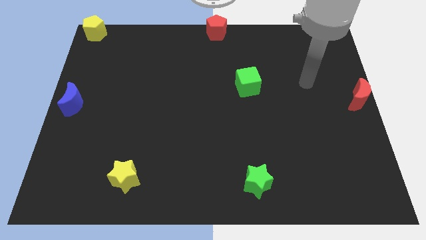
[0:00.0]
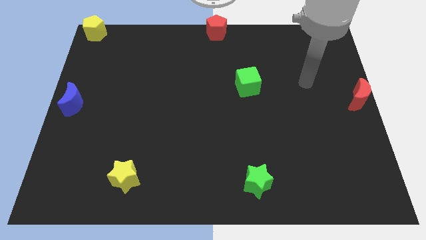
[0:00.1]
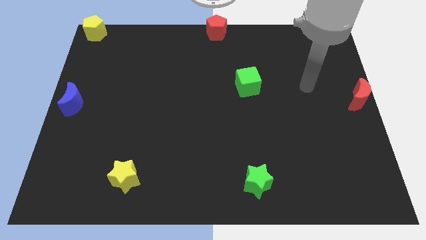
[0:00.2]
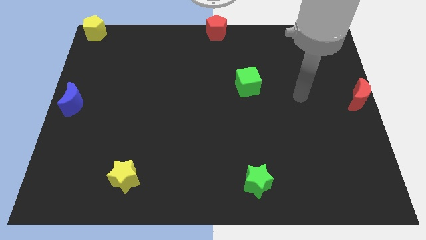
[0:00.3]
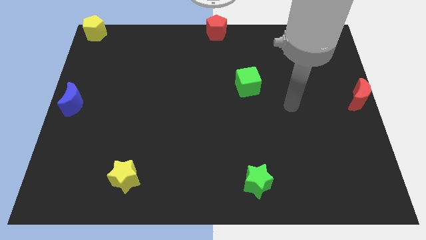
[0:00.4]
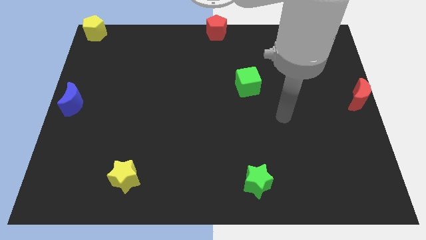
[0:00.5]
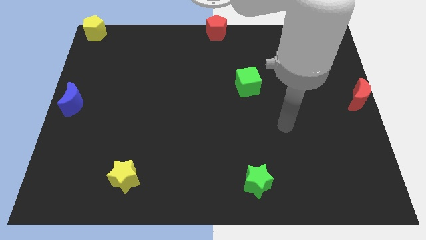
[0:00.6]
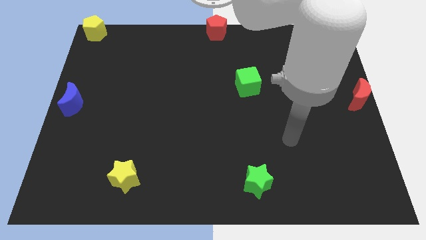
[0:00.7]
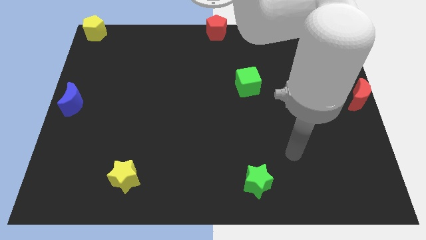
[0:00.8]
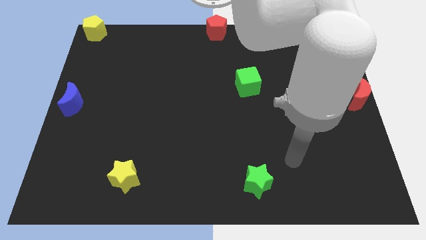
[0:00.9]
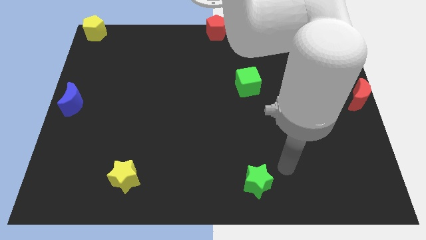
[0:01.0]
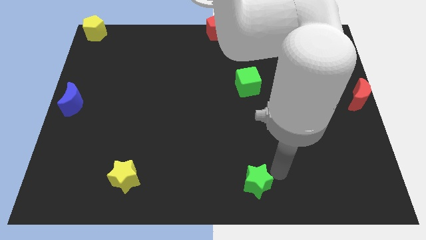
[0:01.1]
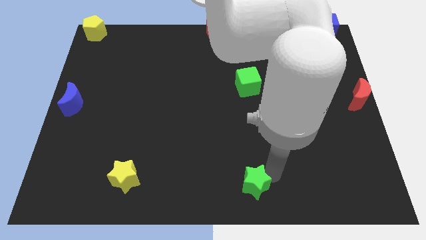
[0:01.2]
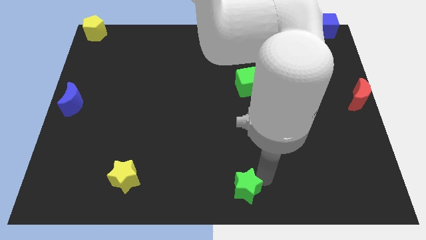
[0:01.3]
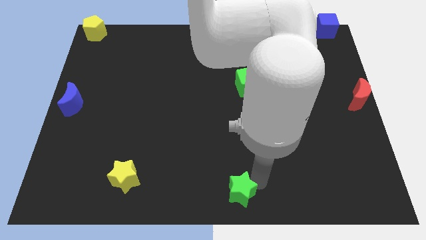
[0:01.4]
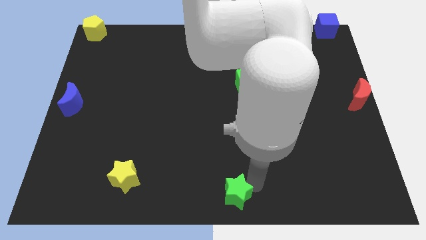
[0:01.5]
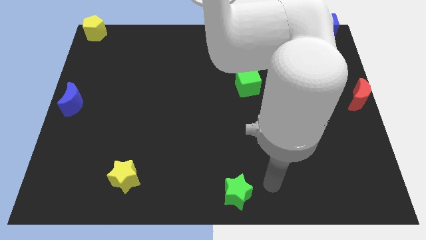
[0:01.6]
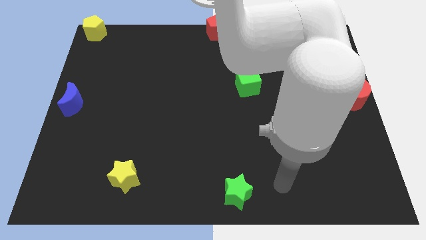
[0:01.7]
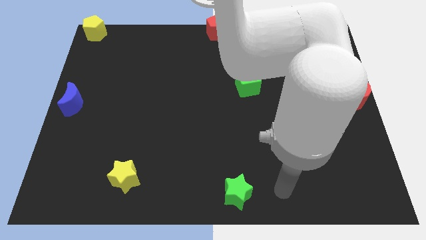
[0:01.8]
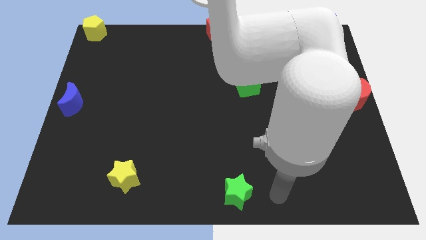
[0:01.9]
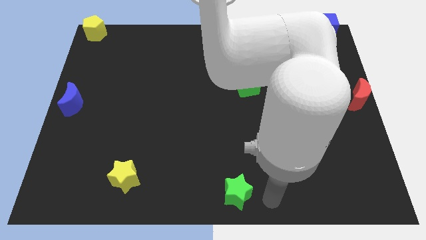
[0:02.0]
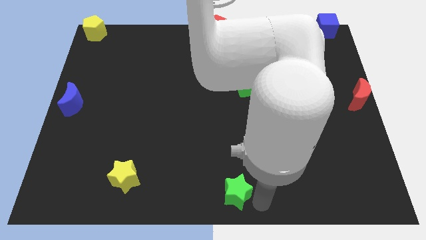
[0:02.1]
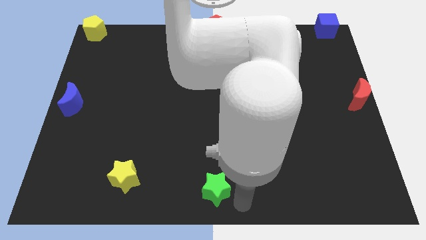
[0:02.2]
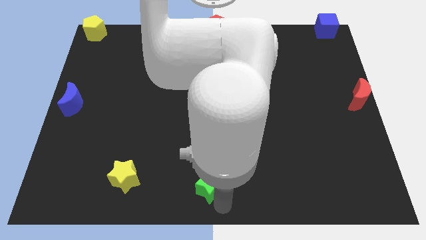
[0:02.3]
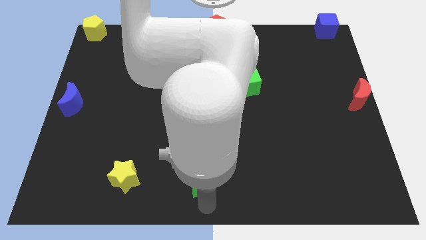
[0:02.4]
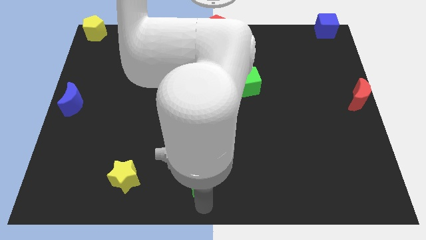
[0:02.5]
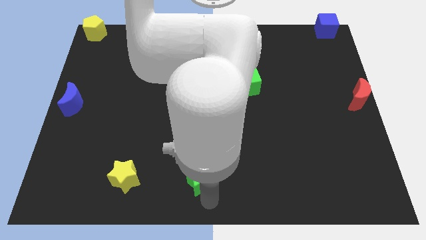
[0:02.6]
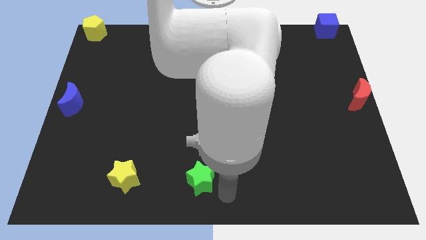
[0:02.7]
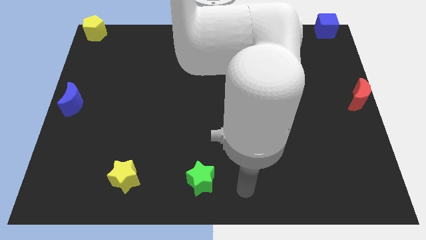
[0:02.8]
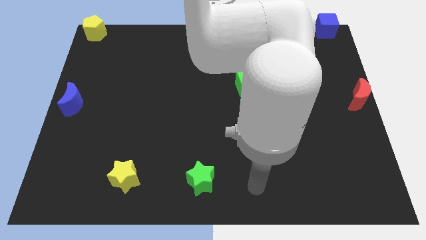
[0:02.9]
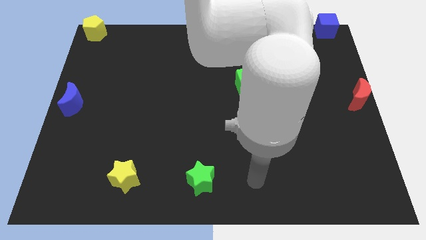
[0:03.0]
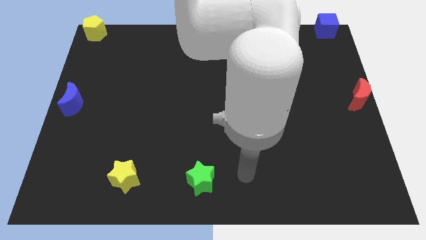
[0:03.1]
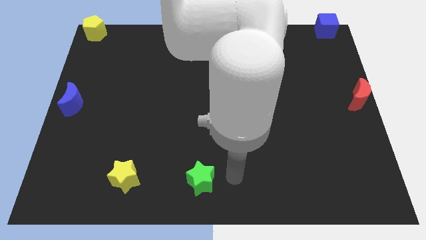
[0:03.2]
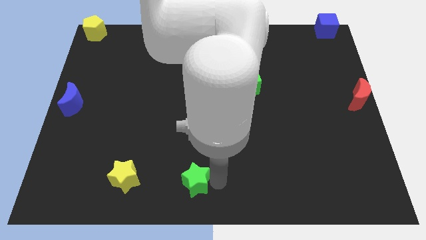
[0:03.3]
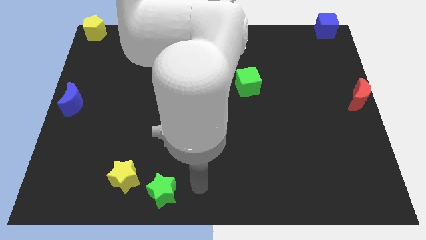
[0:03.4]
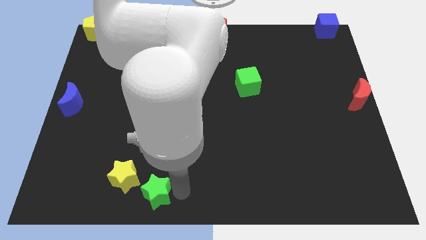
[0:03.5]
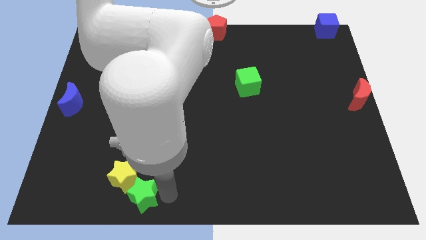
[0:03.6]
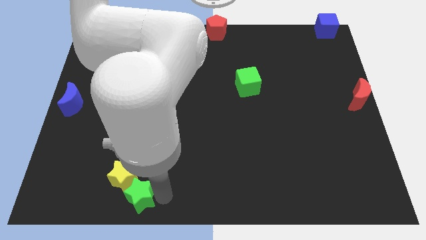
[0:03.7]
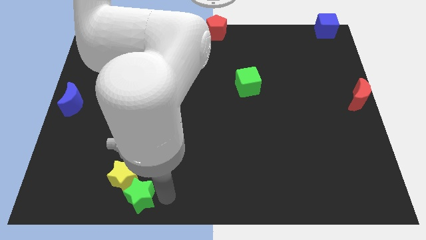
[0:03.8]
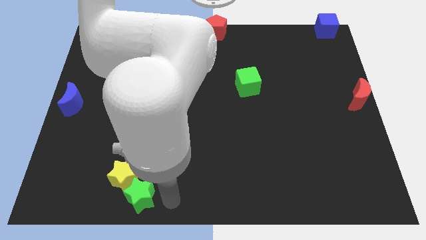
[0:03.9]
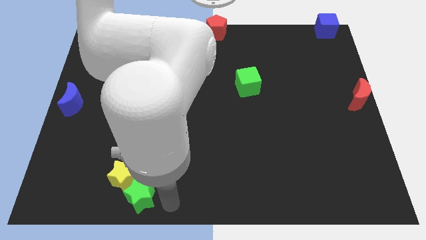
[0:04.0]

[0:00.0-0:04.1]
move the green star to the bottom right side of the yellow star

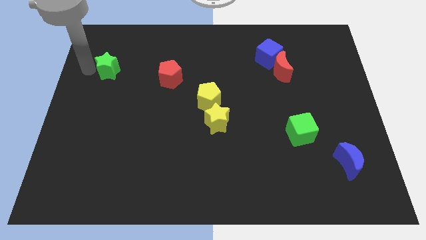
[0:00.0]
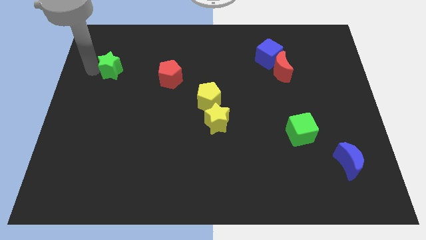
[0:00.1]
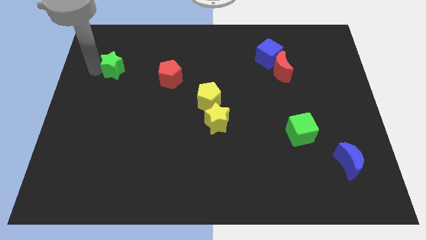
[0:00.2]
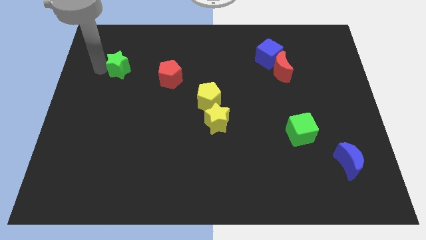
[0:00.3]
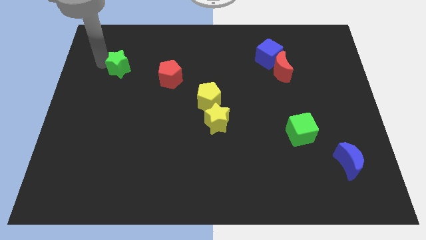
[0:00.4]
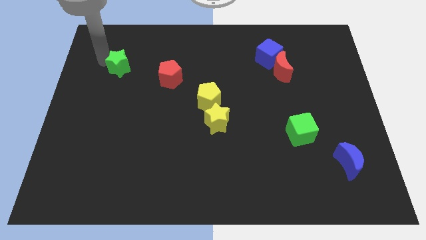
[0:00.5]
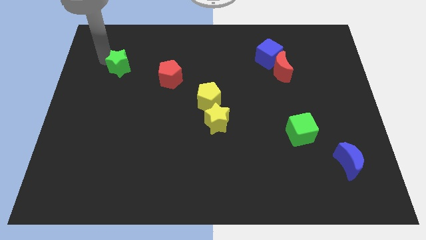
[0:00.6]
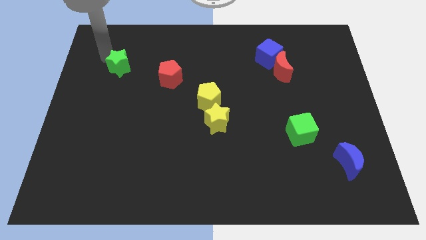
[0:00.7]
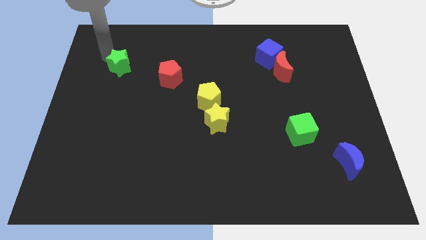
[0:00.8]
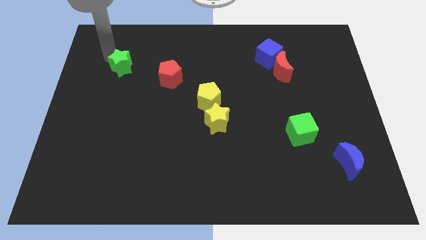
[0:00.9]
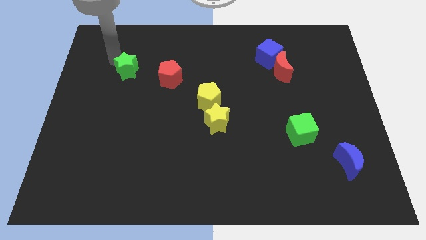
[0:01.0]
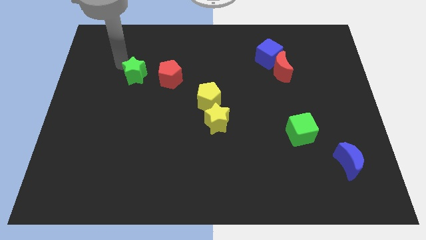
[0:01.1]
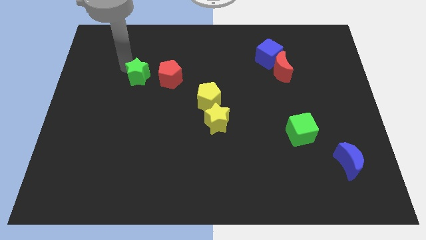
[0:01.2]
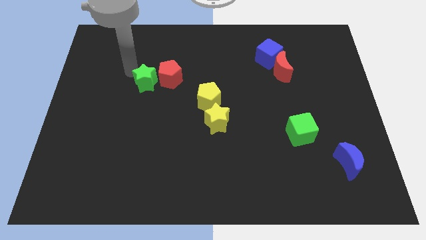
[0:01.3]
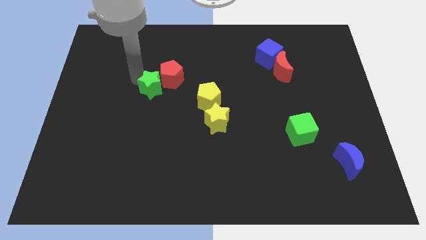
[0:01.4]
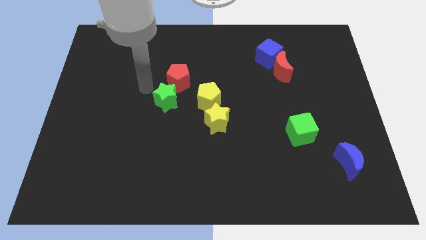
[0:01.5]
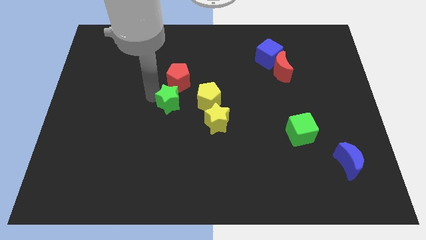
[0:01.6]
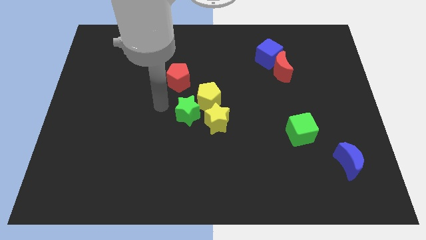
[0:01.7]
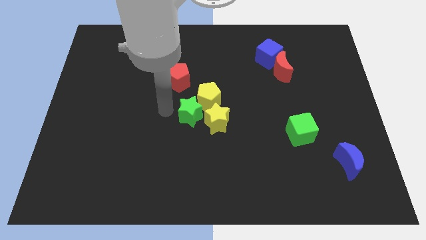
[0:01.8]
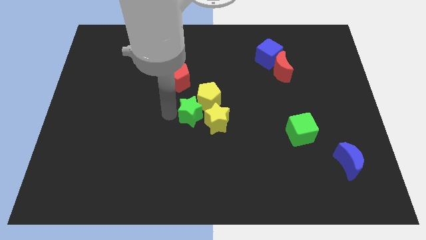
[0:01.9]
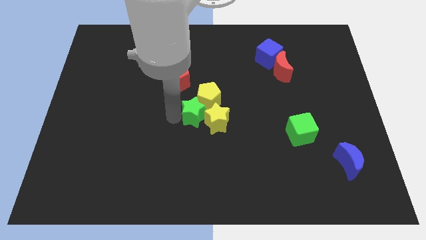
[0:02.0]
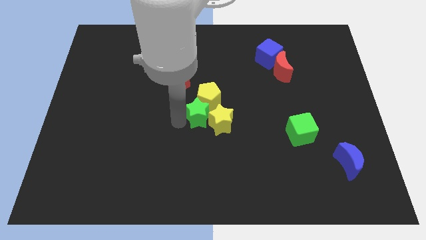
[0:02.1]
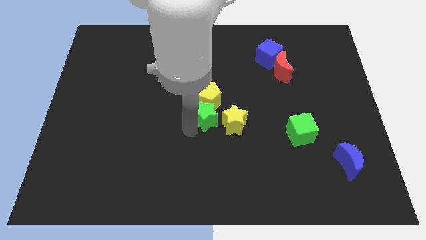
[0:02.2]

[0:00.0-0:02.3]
move the green star to the center of the board beside the yellow star

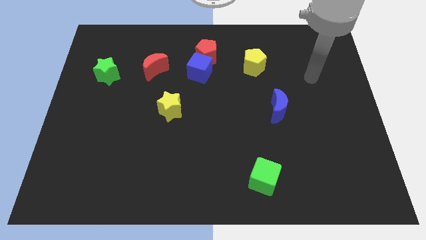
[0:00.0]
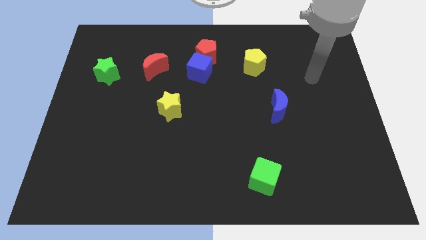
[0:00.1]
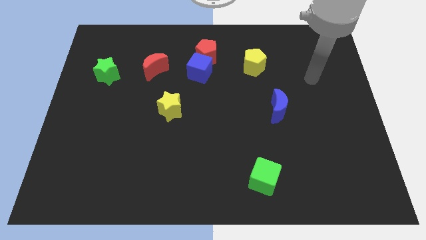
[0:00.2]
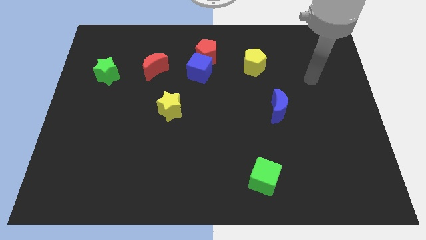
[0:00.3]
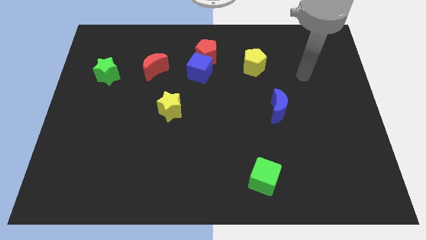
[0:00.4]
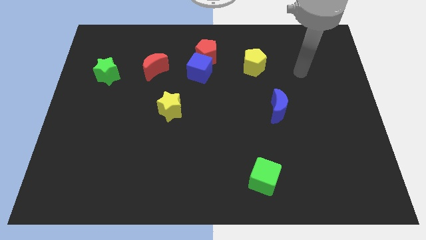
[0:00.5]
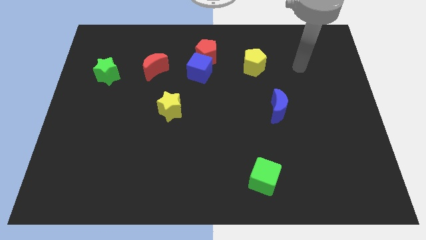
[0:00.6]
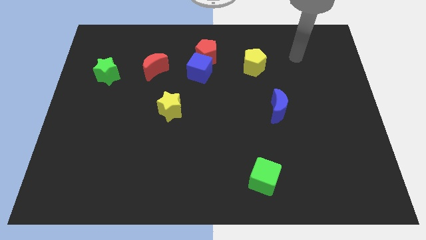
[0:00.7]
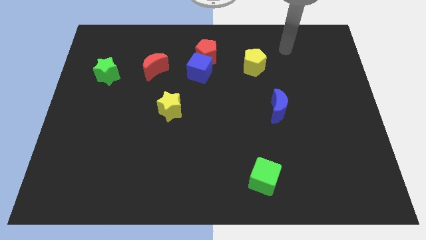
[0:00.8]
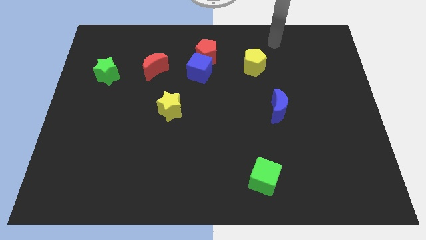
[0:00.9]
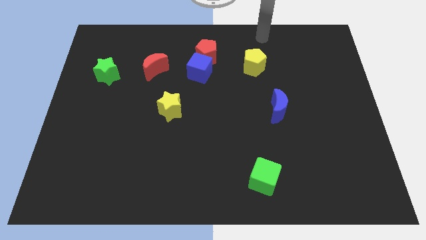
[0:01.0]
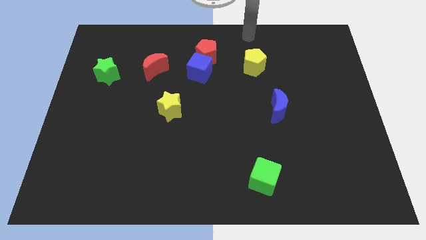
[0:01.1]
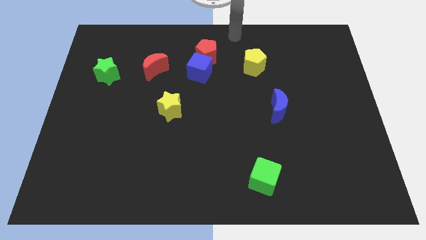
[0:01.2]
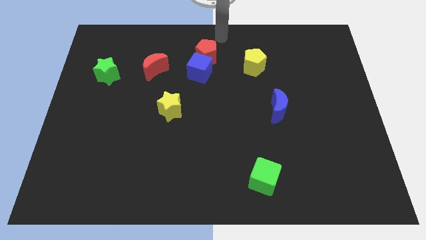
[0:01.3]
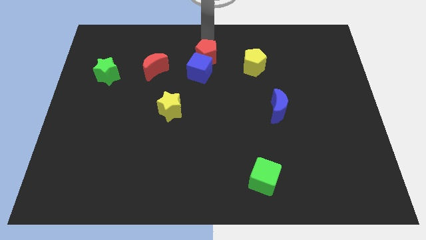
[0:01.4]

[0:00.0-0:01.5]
move your arm towards the top center of the board

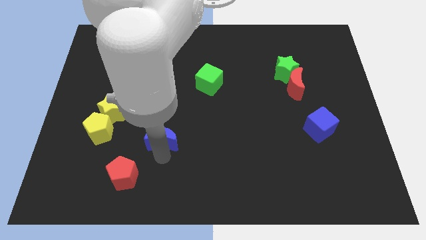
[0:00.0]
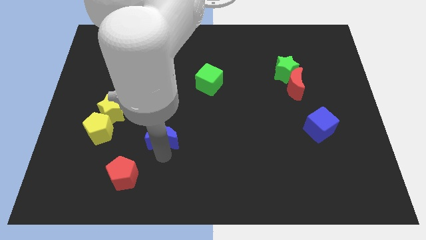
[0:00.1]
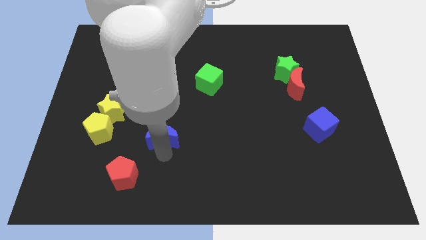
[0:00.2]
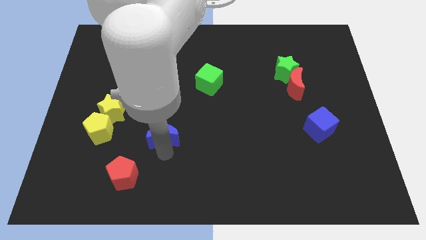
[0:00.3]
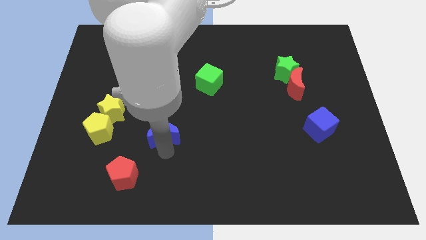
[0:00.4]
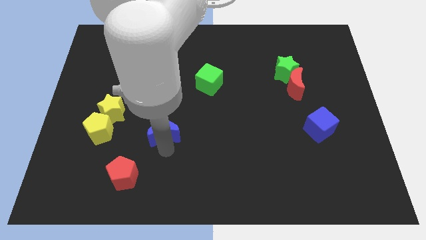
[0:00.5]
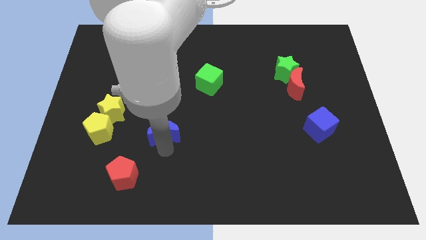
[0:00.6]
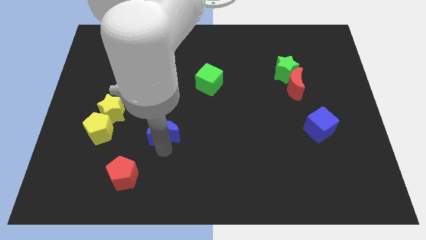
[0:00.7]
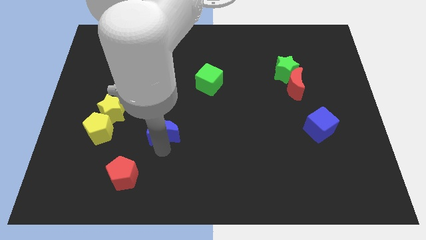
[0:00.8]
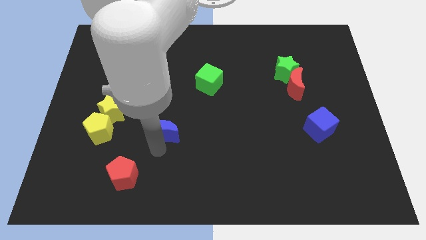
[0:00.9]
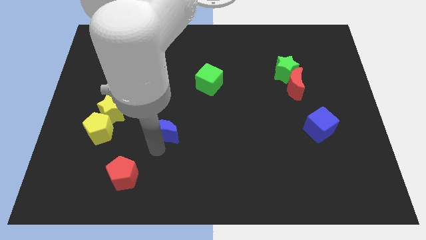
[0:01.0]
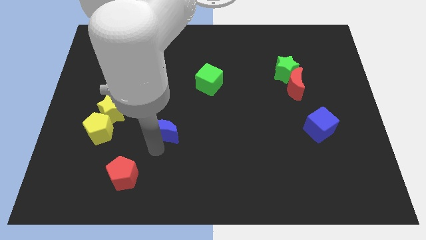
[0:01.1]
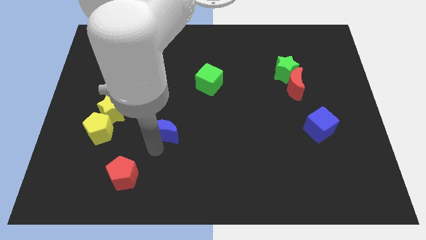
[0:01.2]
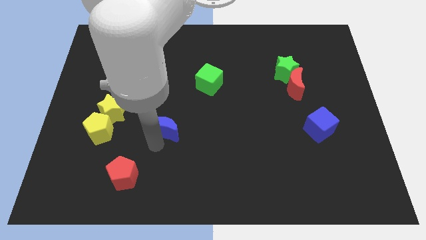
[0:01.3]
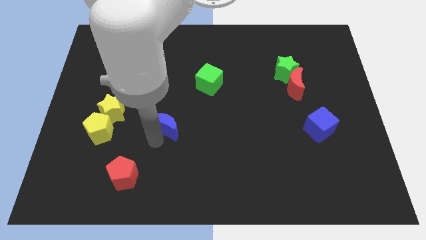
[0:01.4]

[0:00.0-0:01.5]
place the blue crescent to the right side of the yellow pentagon
